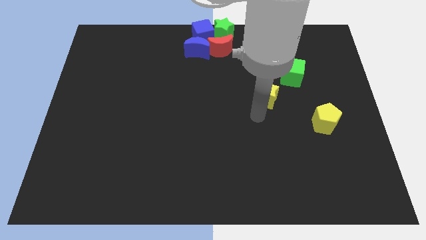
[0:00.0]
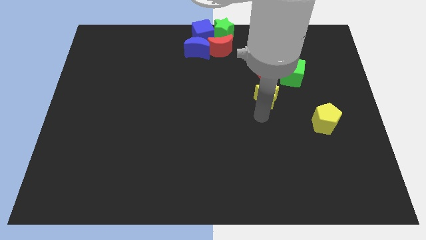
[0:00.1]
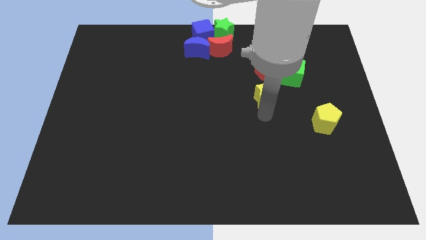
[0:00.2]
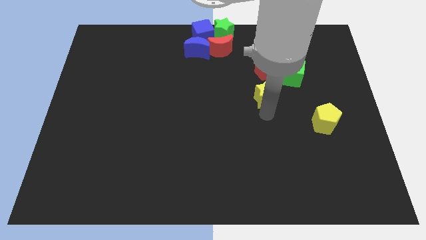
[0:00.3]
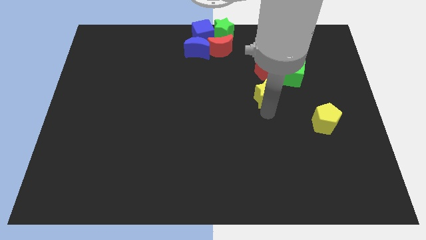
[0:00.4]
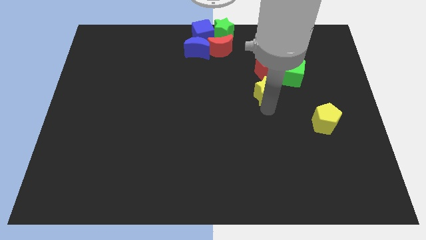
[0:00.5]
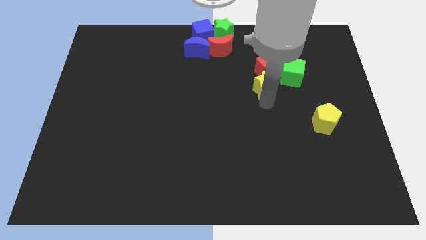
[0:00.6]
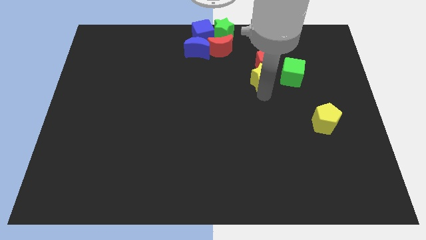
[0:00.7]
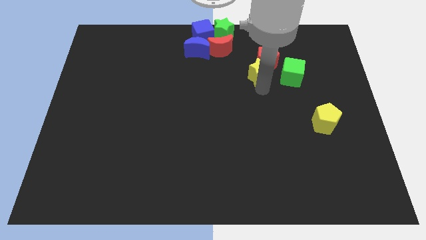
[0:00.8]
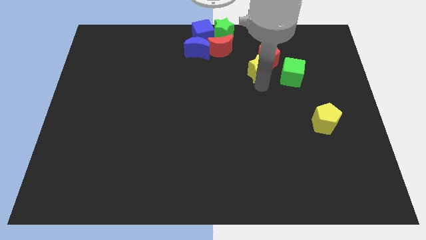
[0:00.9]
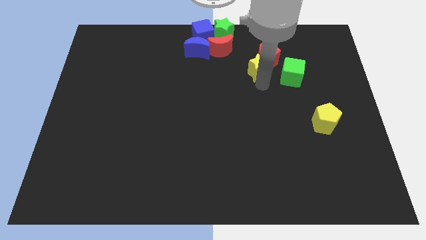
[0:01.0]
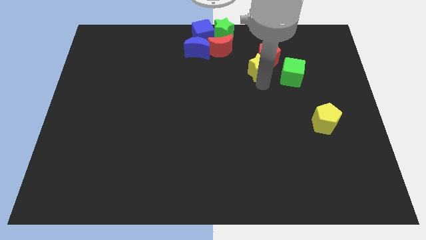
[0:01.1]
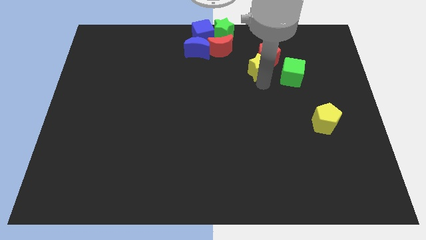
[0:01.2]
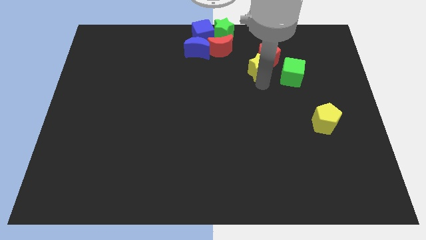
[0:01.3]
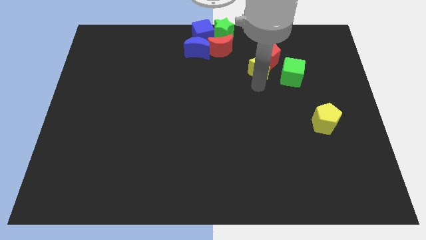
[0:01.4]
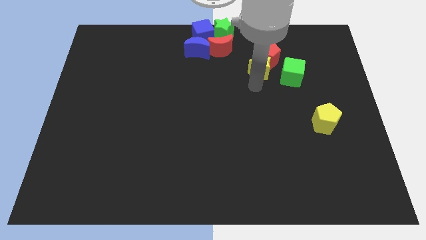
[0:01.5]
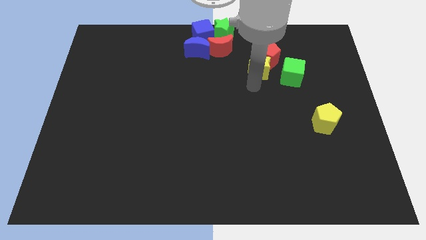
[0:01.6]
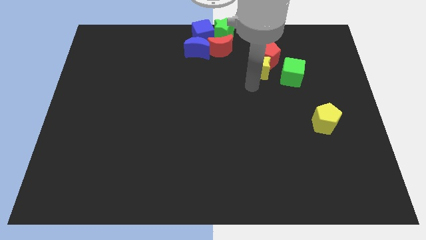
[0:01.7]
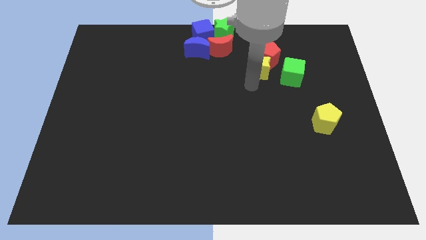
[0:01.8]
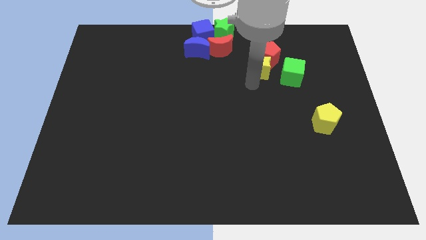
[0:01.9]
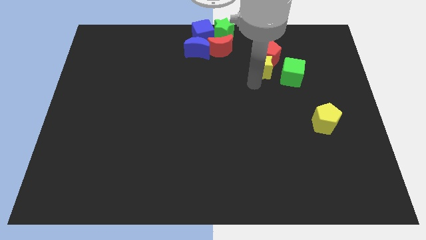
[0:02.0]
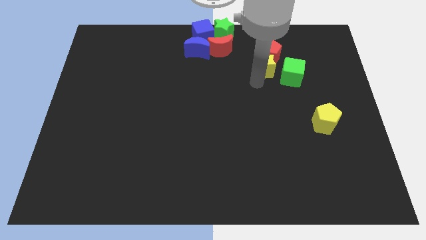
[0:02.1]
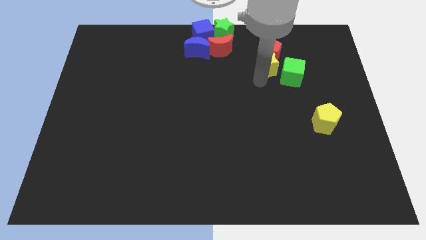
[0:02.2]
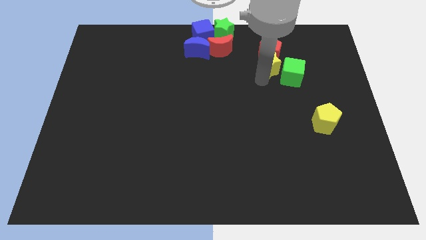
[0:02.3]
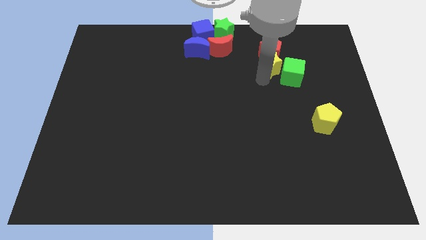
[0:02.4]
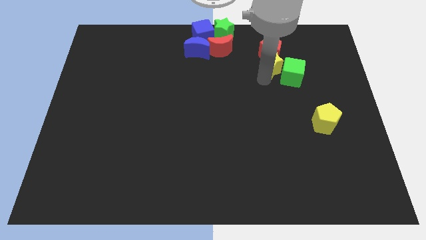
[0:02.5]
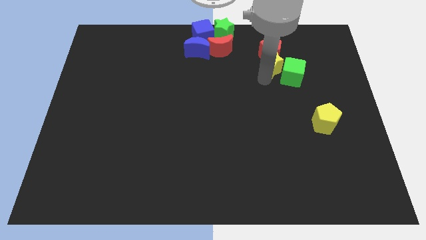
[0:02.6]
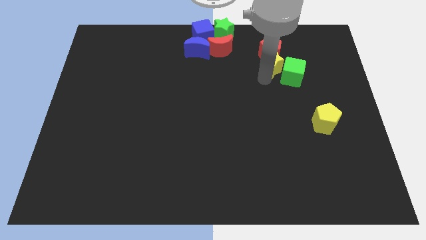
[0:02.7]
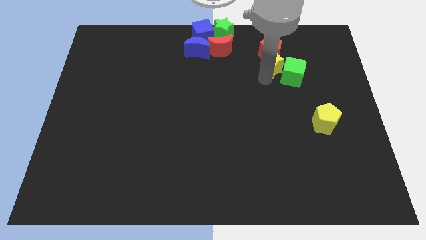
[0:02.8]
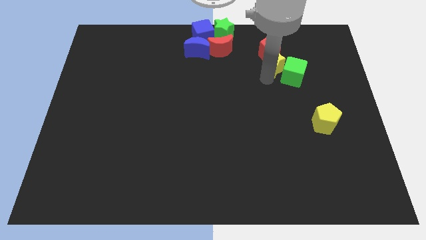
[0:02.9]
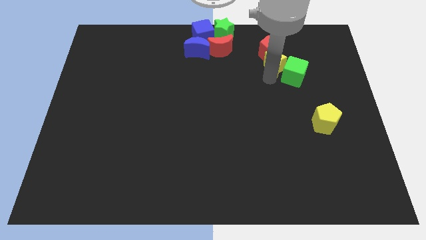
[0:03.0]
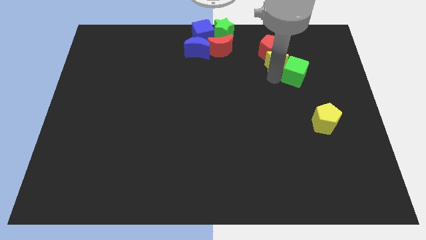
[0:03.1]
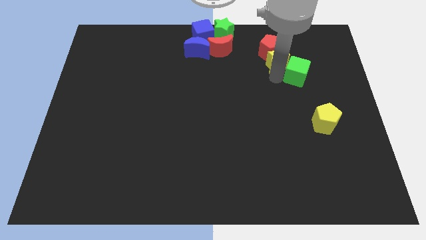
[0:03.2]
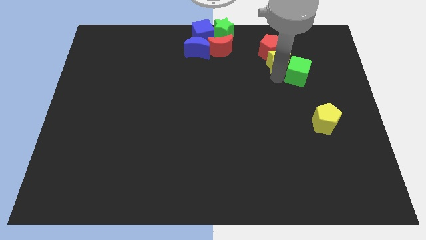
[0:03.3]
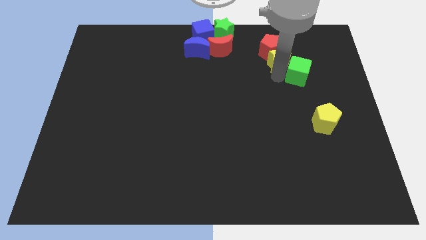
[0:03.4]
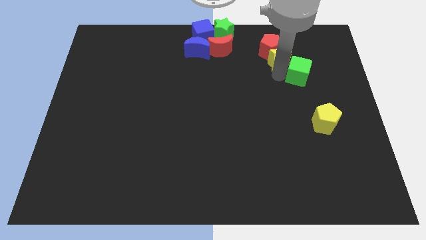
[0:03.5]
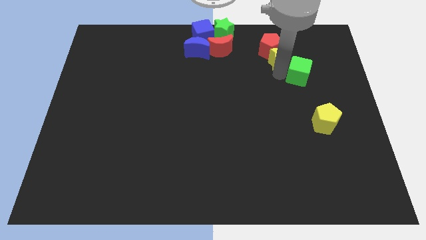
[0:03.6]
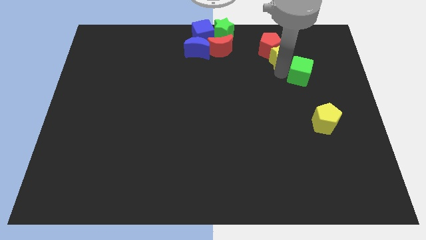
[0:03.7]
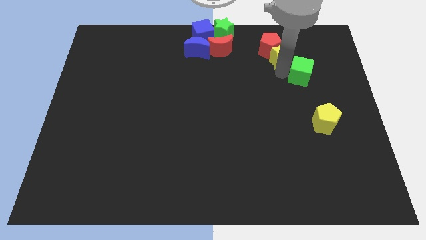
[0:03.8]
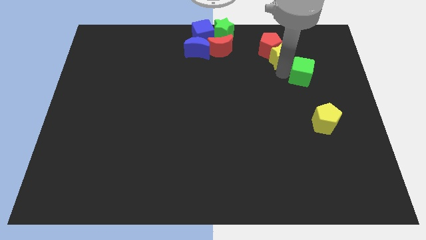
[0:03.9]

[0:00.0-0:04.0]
place the yellow star in between the red pentagon and the green cube

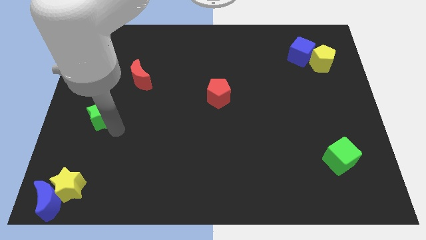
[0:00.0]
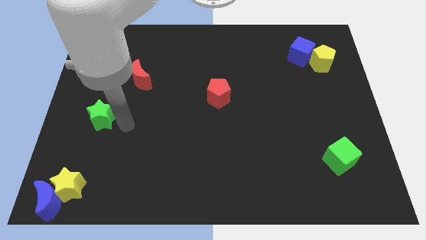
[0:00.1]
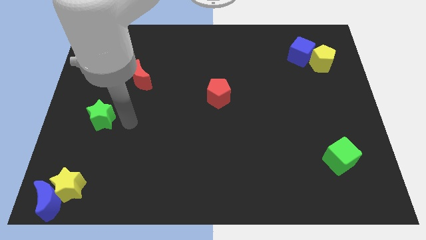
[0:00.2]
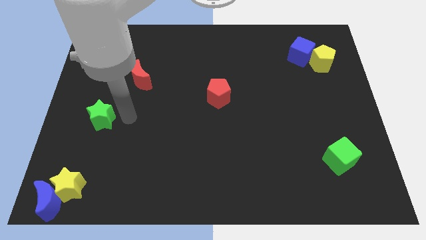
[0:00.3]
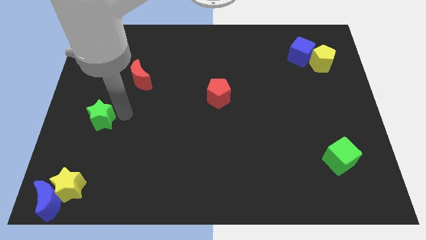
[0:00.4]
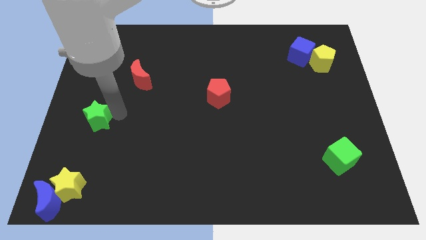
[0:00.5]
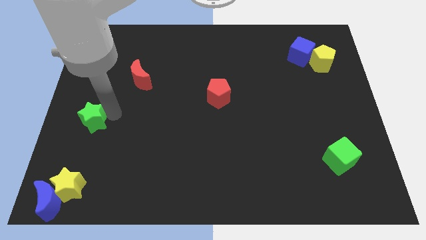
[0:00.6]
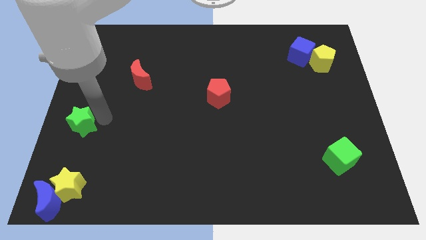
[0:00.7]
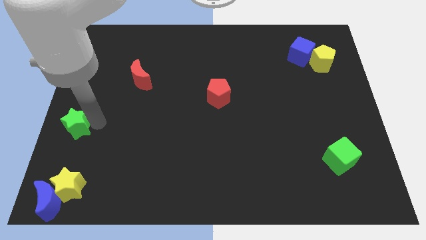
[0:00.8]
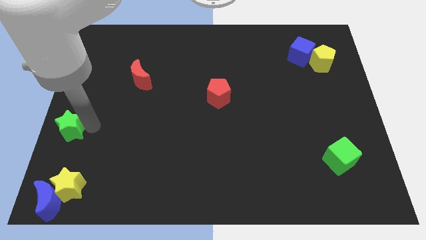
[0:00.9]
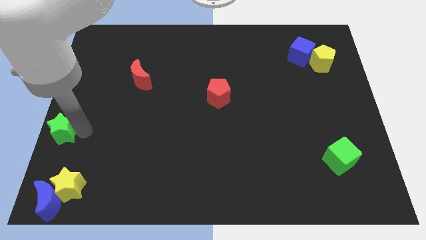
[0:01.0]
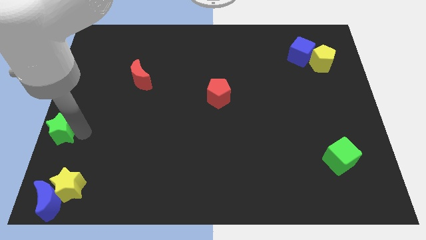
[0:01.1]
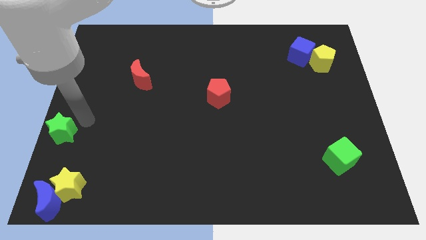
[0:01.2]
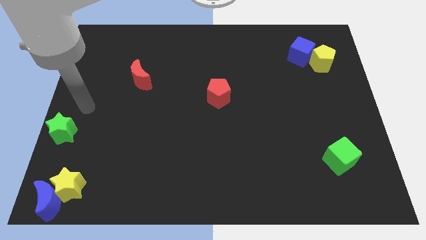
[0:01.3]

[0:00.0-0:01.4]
push green star to the left corner

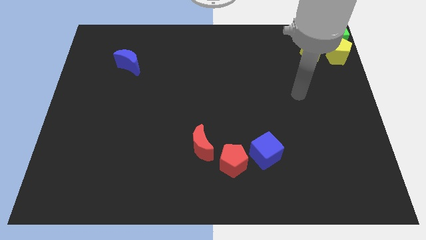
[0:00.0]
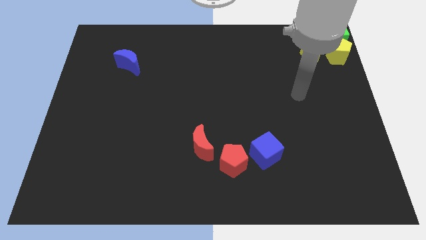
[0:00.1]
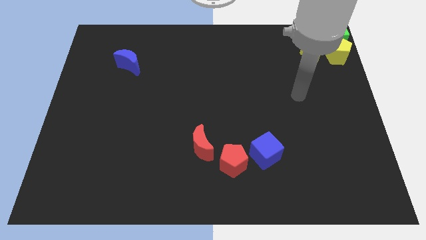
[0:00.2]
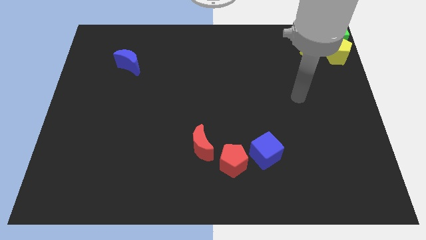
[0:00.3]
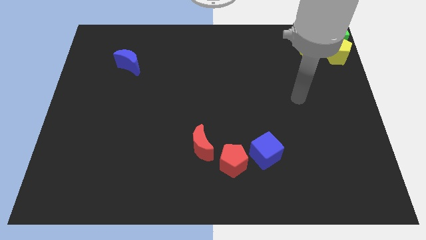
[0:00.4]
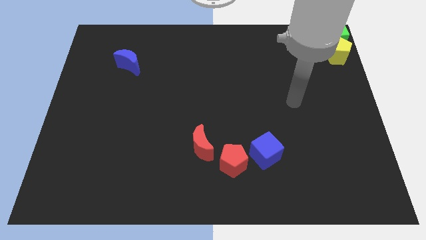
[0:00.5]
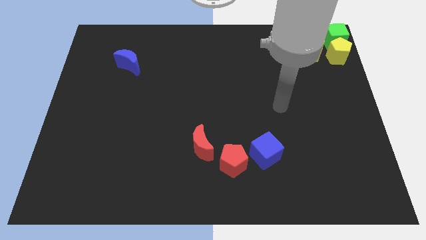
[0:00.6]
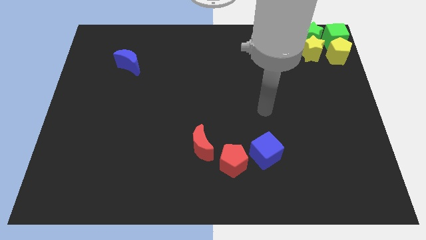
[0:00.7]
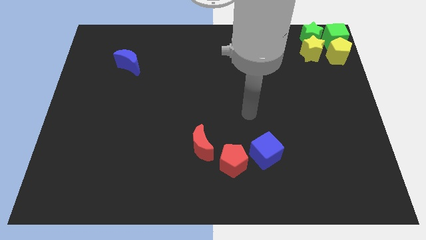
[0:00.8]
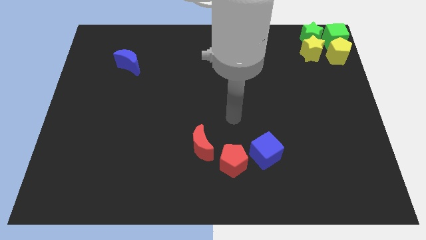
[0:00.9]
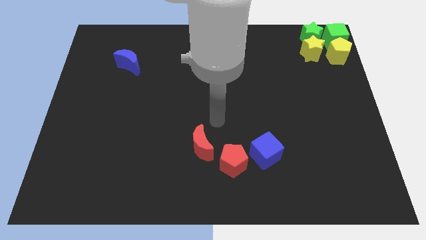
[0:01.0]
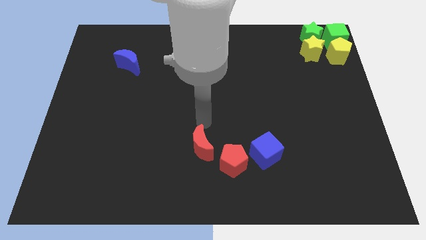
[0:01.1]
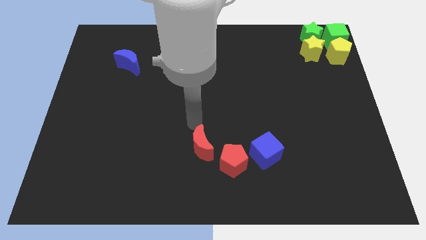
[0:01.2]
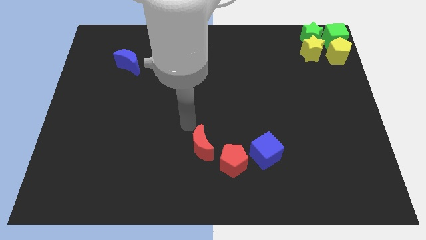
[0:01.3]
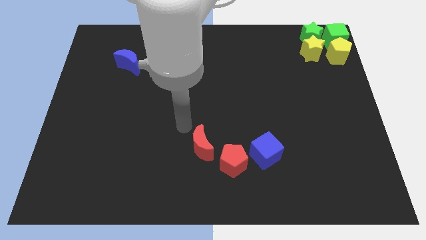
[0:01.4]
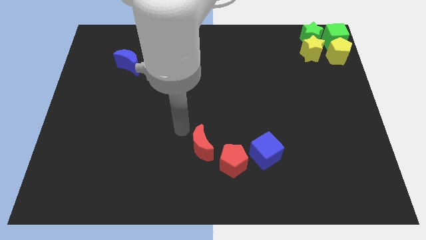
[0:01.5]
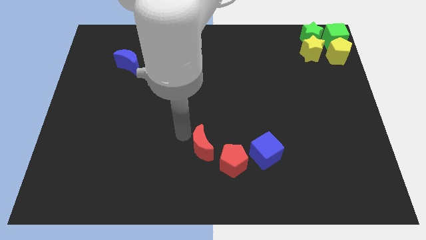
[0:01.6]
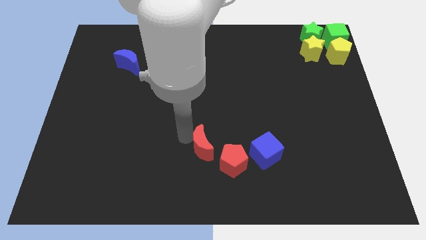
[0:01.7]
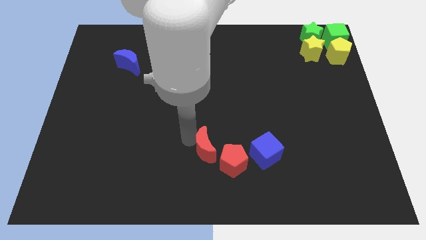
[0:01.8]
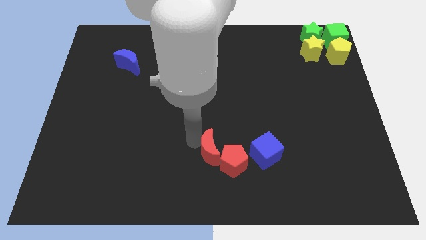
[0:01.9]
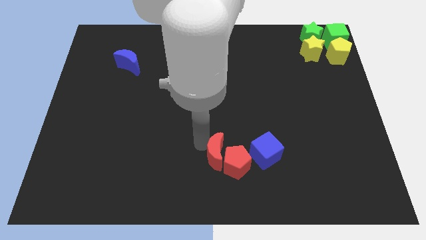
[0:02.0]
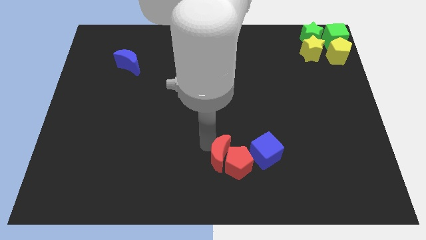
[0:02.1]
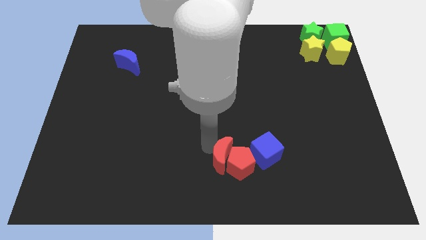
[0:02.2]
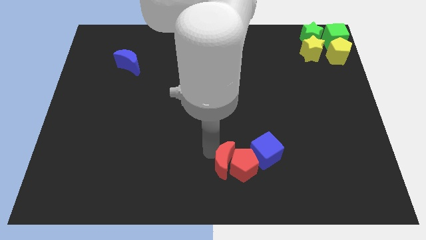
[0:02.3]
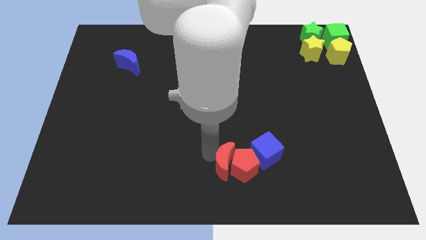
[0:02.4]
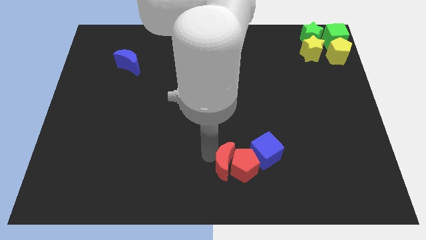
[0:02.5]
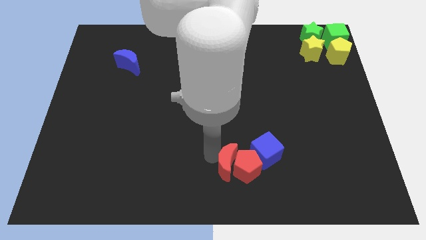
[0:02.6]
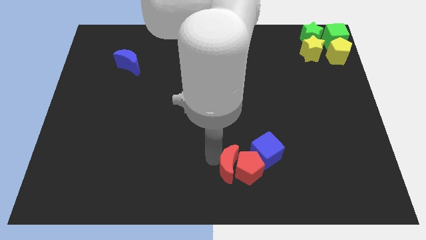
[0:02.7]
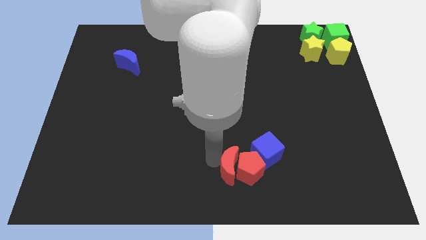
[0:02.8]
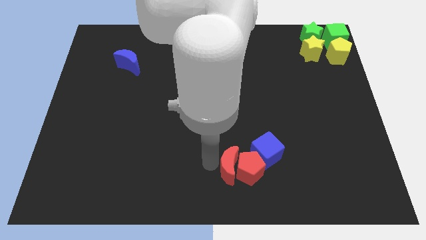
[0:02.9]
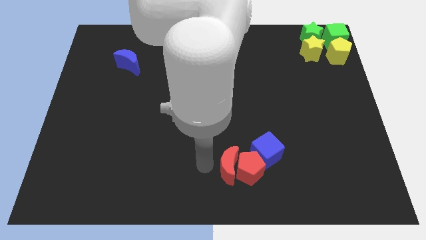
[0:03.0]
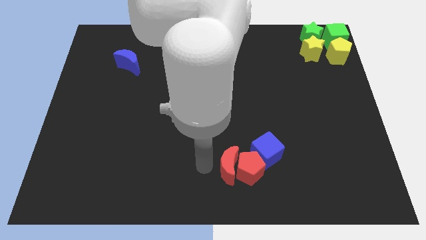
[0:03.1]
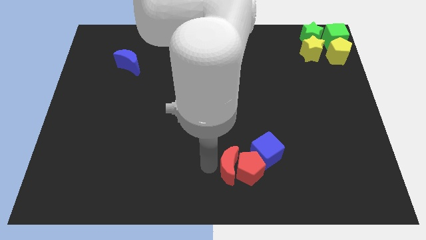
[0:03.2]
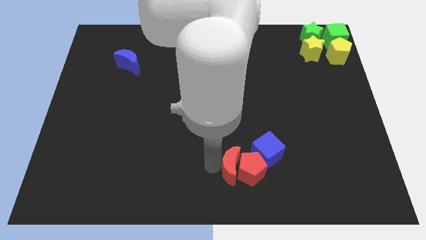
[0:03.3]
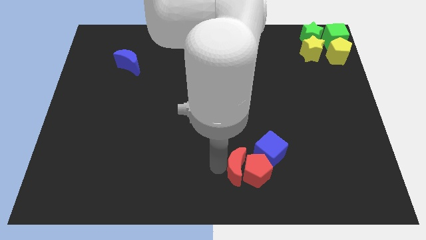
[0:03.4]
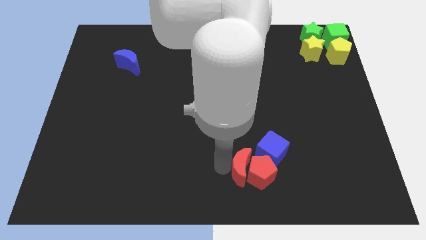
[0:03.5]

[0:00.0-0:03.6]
push red blocks into blue cube
